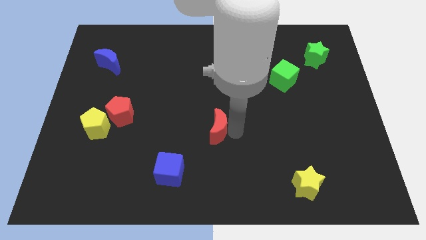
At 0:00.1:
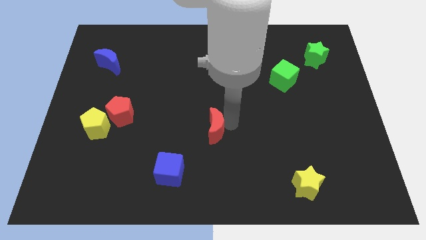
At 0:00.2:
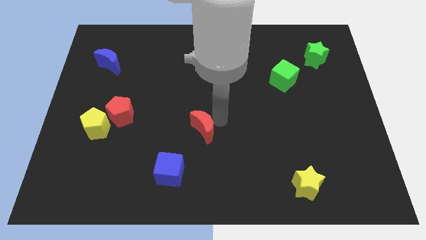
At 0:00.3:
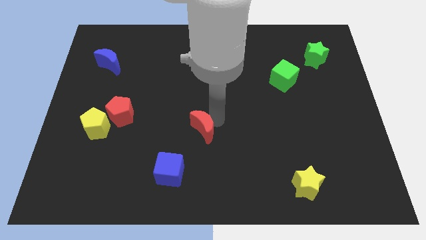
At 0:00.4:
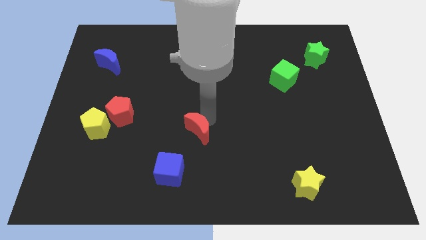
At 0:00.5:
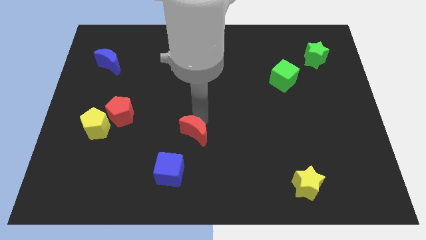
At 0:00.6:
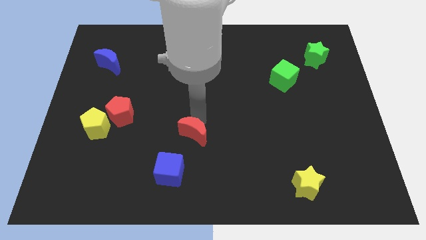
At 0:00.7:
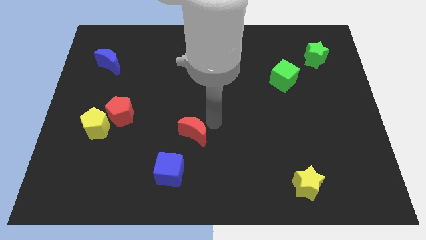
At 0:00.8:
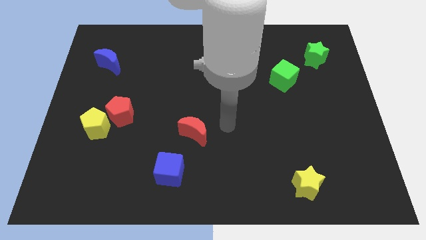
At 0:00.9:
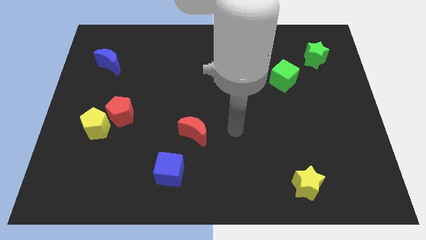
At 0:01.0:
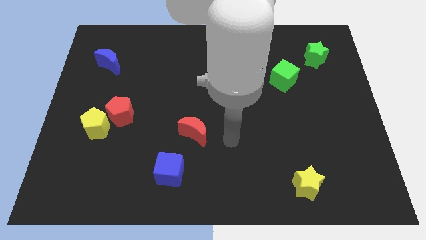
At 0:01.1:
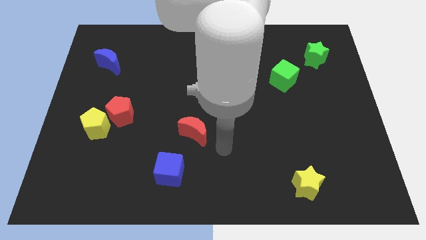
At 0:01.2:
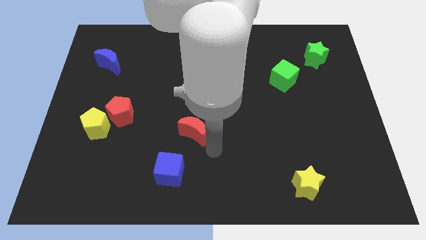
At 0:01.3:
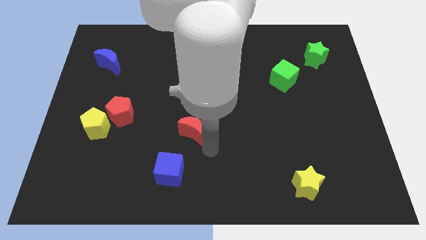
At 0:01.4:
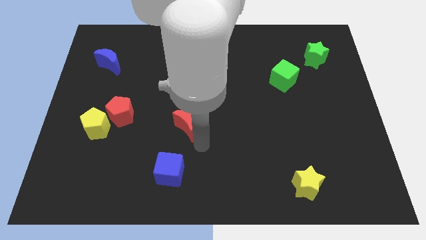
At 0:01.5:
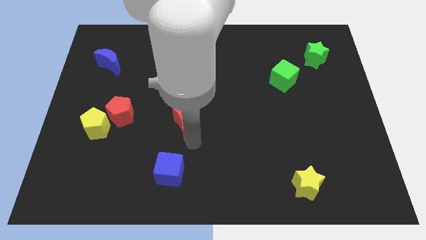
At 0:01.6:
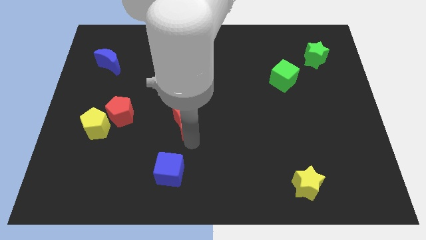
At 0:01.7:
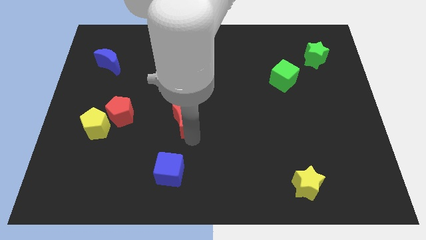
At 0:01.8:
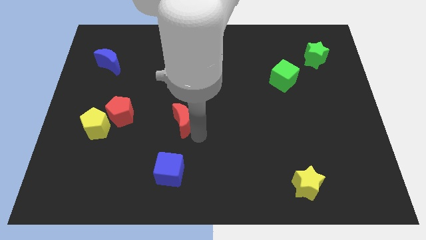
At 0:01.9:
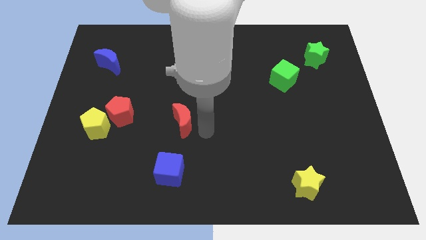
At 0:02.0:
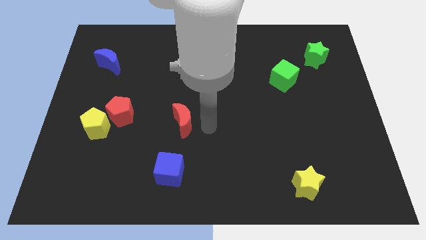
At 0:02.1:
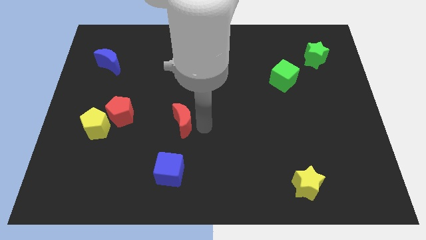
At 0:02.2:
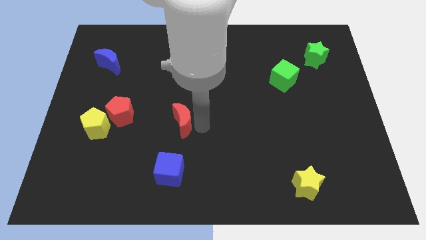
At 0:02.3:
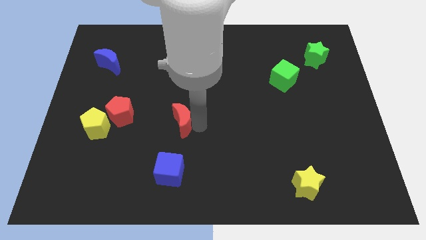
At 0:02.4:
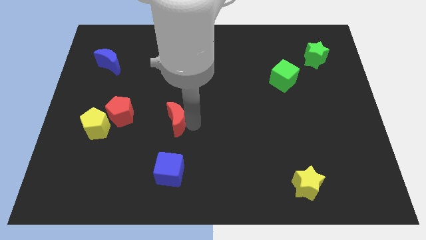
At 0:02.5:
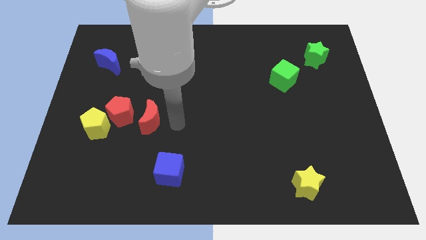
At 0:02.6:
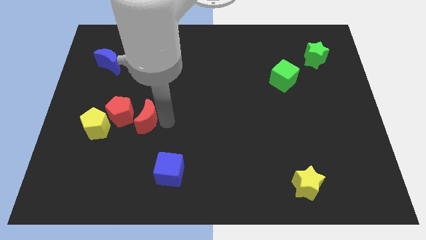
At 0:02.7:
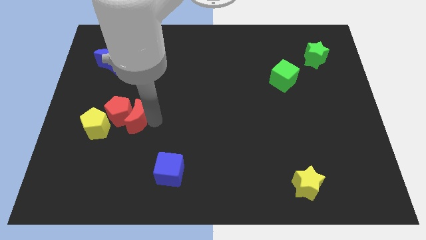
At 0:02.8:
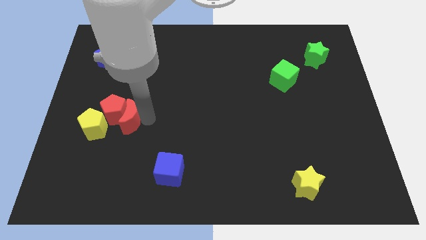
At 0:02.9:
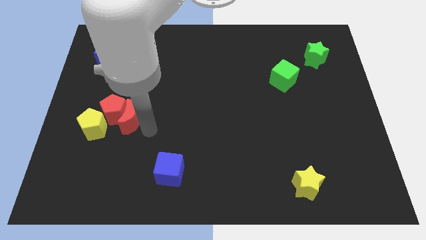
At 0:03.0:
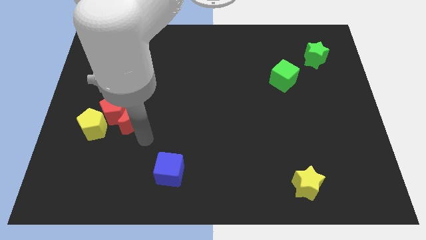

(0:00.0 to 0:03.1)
move the red moon close to the red pentagon

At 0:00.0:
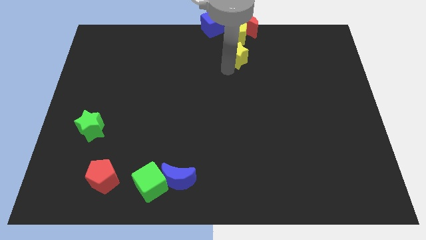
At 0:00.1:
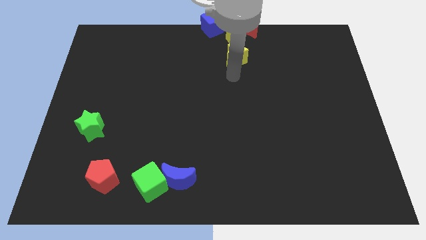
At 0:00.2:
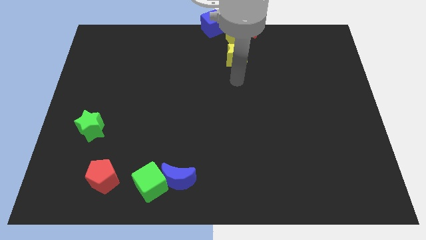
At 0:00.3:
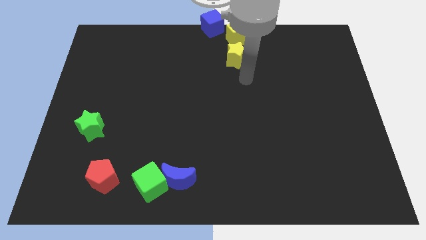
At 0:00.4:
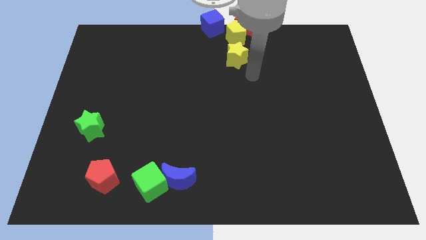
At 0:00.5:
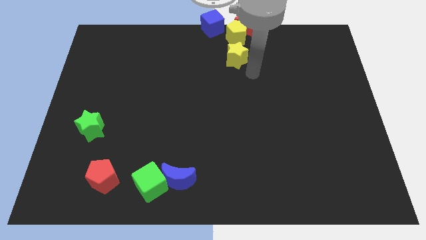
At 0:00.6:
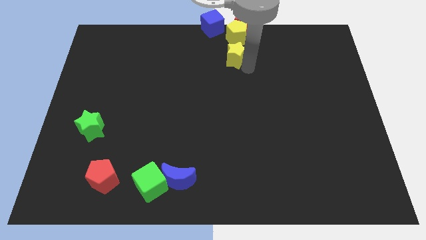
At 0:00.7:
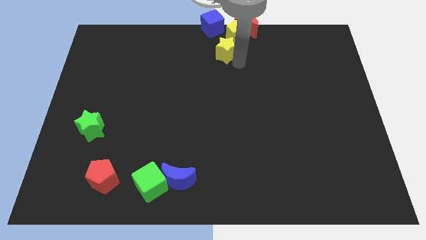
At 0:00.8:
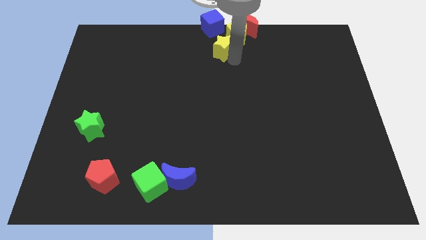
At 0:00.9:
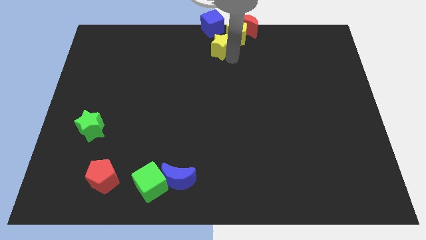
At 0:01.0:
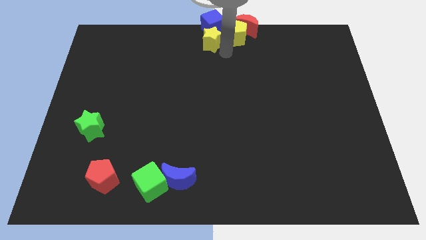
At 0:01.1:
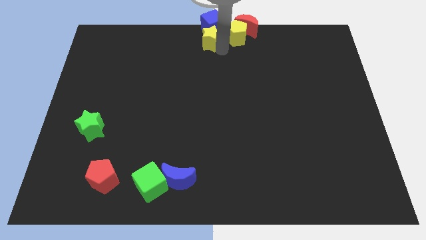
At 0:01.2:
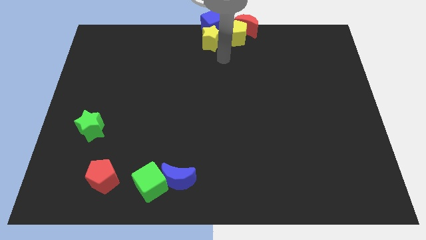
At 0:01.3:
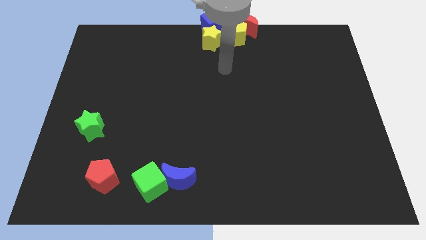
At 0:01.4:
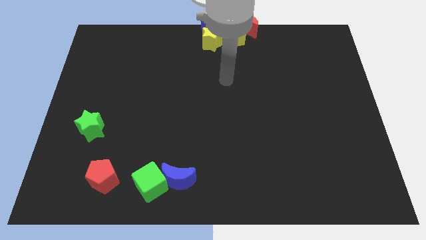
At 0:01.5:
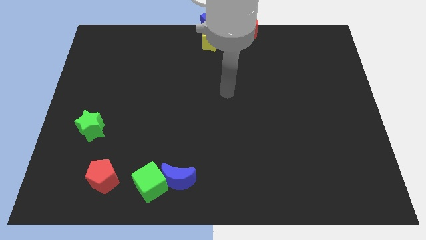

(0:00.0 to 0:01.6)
place the yellow star below the blue cube

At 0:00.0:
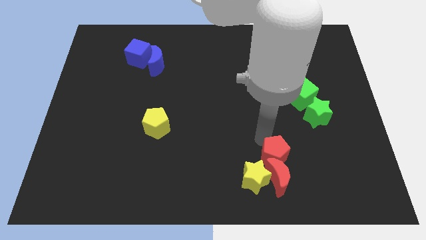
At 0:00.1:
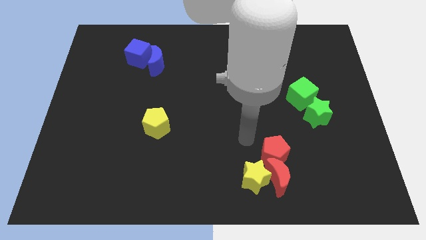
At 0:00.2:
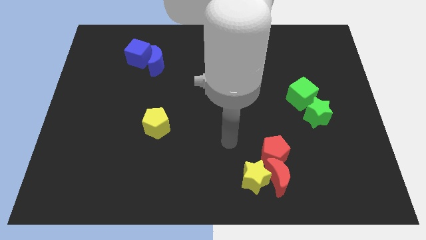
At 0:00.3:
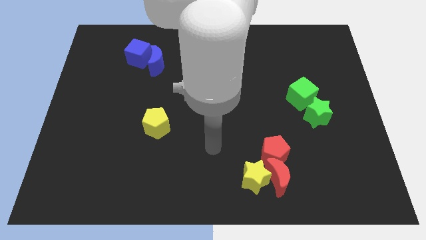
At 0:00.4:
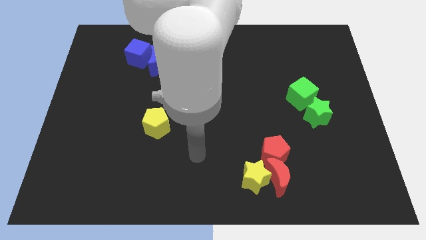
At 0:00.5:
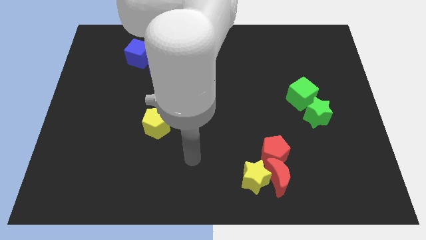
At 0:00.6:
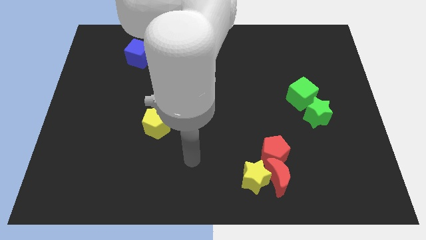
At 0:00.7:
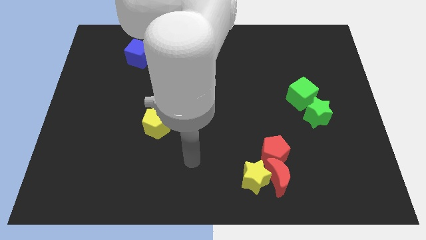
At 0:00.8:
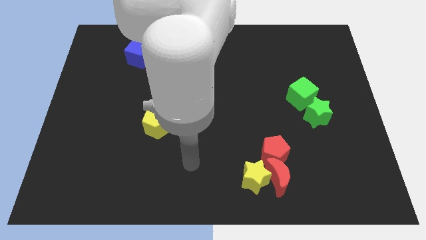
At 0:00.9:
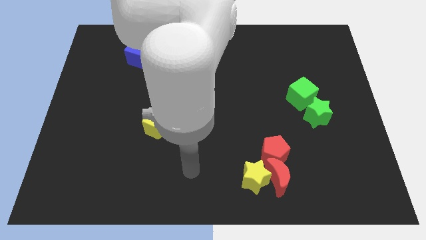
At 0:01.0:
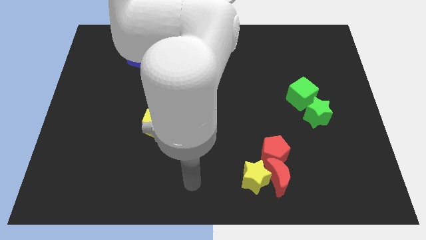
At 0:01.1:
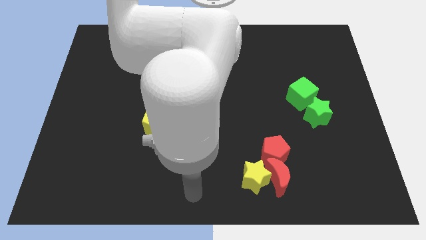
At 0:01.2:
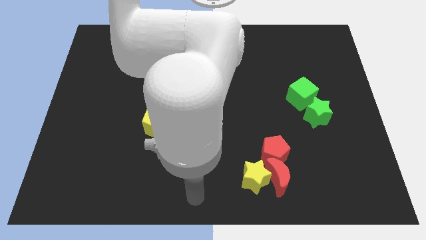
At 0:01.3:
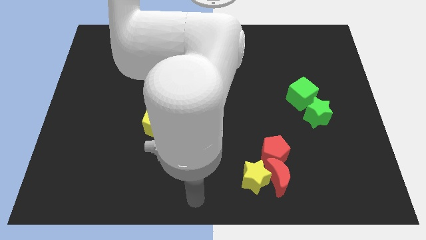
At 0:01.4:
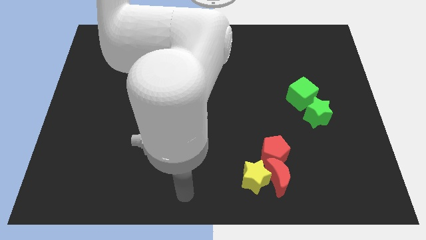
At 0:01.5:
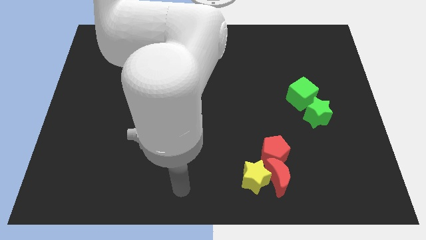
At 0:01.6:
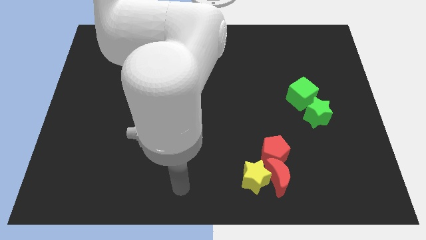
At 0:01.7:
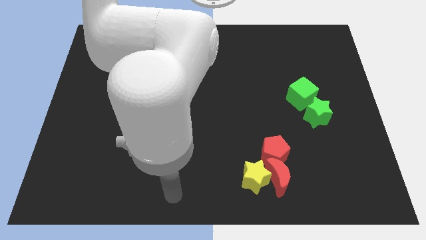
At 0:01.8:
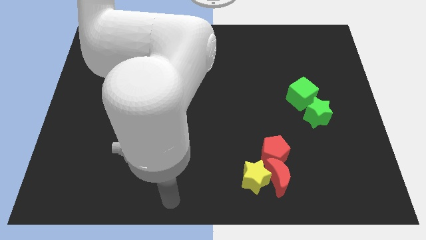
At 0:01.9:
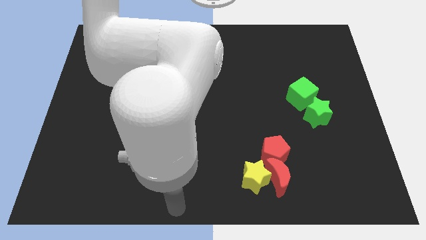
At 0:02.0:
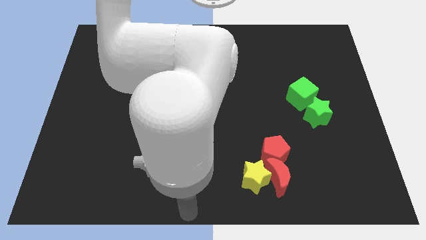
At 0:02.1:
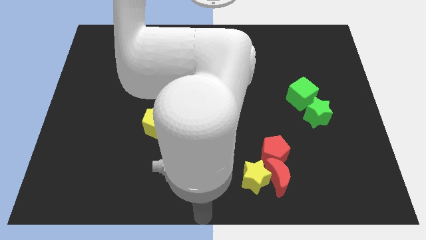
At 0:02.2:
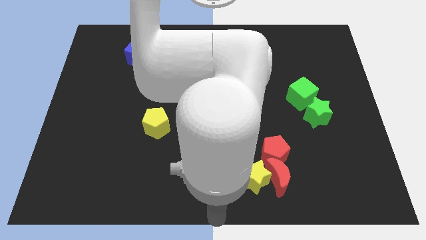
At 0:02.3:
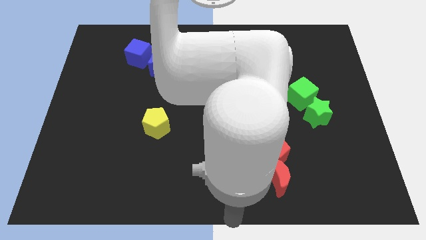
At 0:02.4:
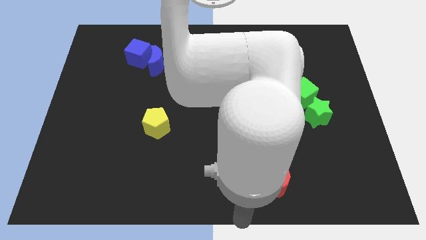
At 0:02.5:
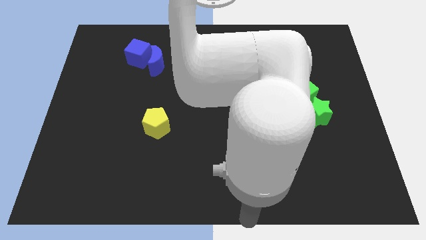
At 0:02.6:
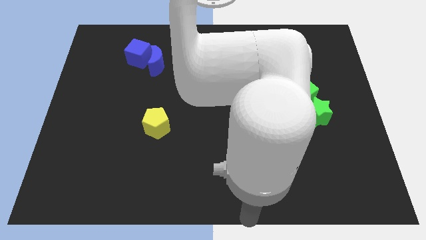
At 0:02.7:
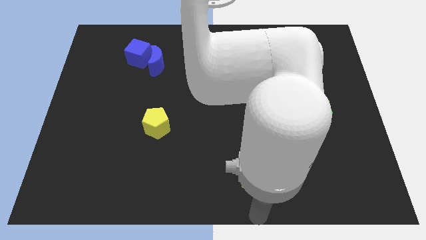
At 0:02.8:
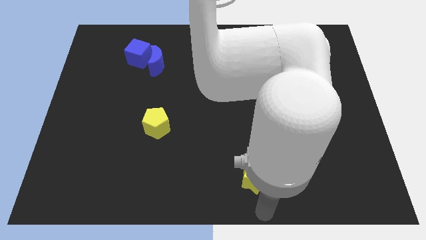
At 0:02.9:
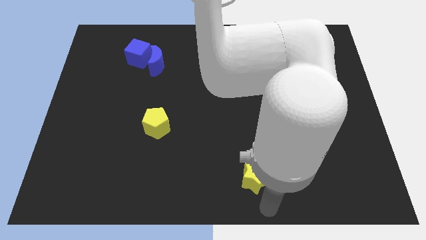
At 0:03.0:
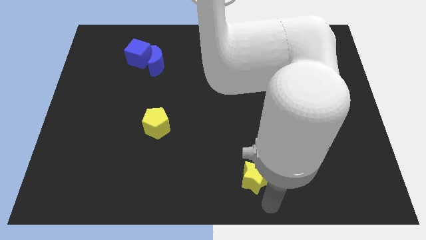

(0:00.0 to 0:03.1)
move your arm to the bottom side of the yellow star

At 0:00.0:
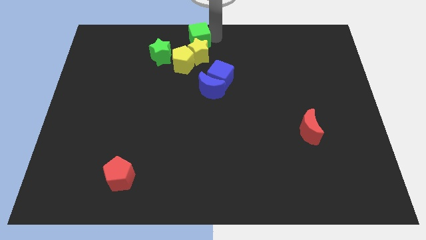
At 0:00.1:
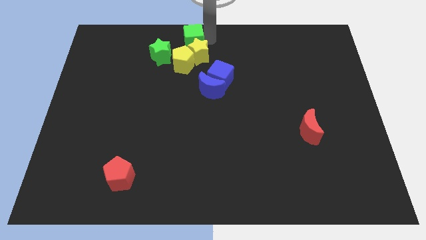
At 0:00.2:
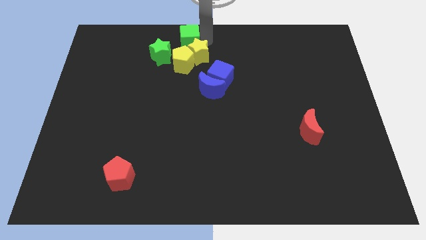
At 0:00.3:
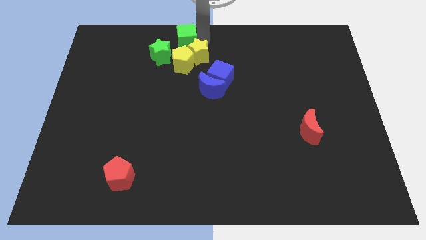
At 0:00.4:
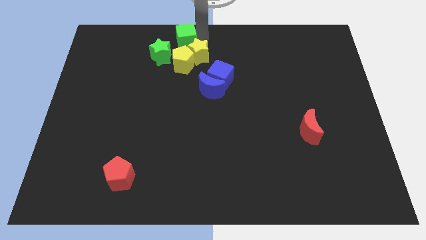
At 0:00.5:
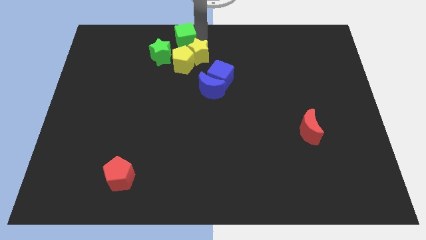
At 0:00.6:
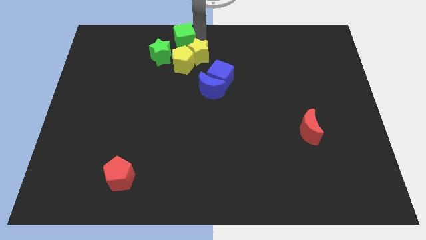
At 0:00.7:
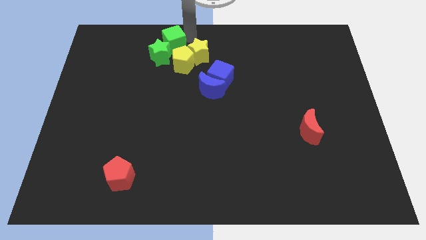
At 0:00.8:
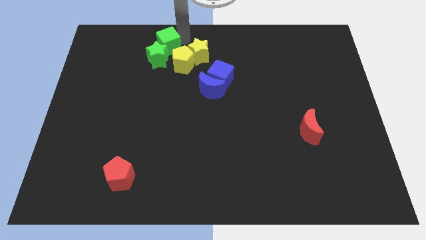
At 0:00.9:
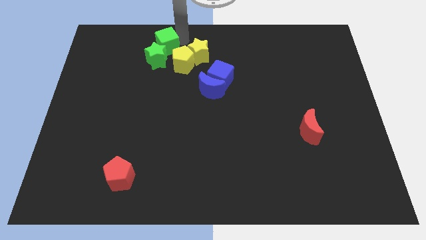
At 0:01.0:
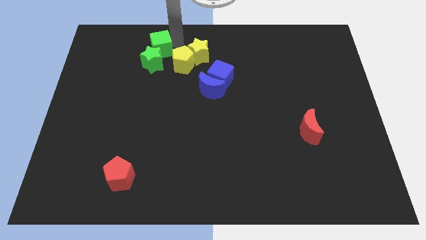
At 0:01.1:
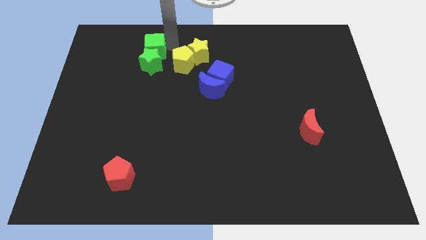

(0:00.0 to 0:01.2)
push the green cube into the green star
